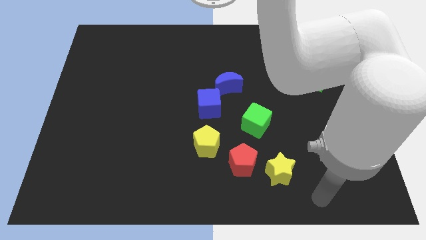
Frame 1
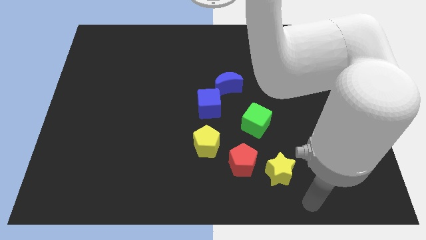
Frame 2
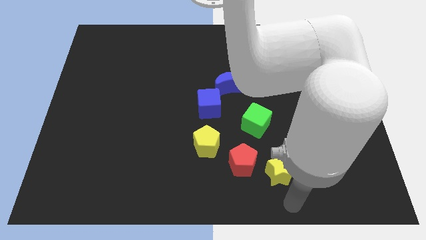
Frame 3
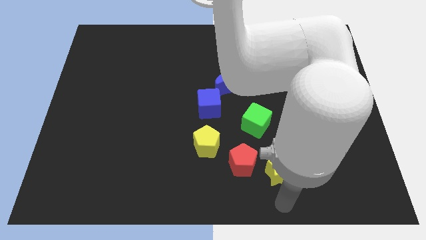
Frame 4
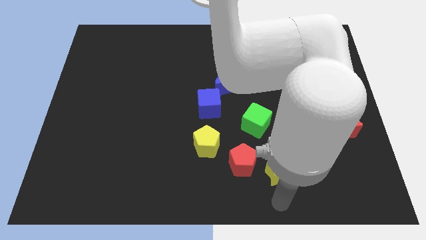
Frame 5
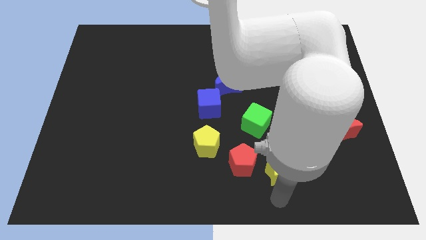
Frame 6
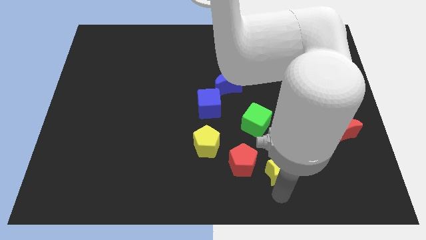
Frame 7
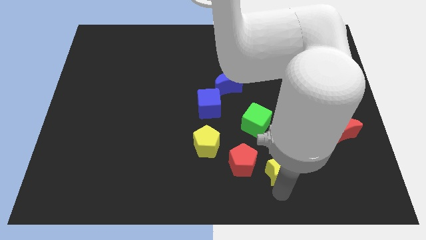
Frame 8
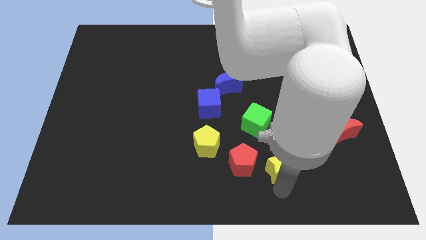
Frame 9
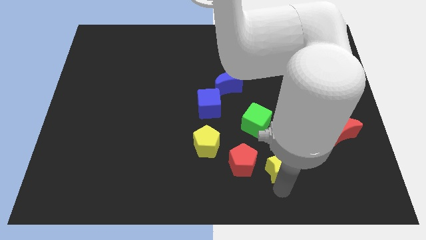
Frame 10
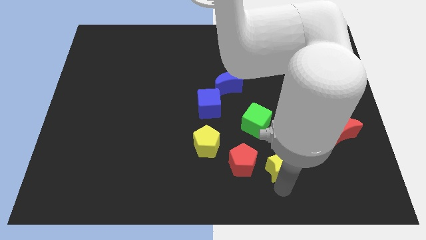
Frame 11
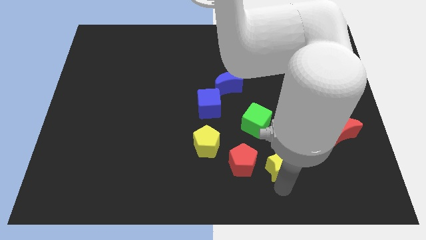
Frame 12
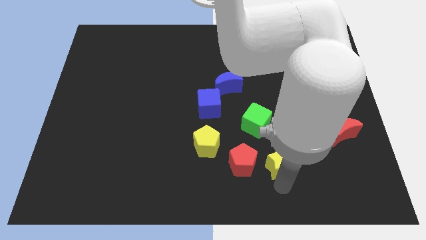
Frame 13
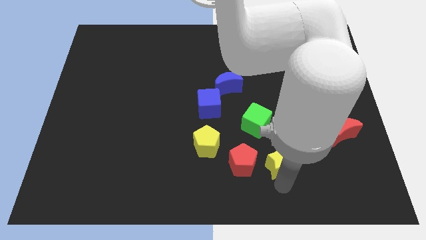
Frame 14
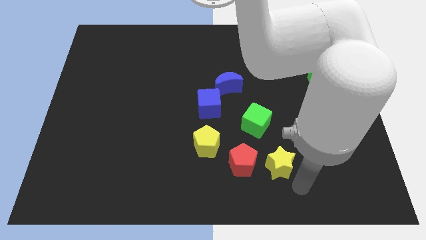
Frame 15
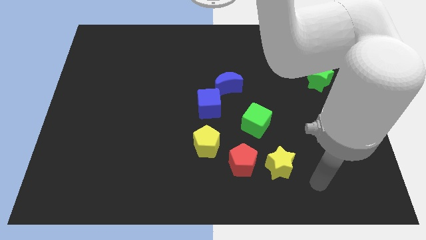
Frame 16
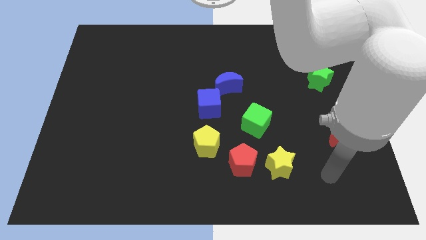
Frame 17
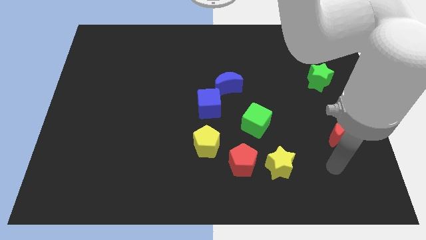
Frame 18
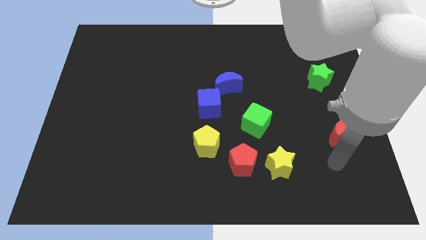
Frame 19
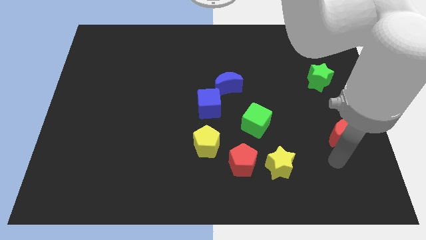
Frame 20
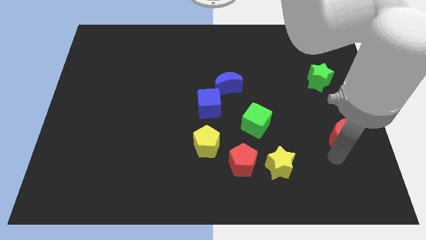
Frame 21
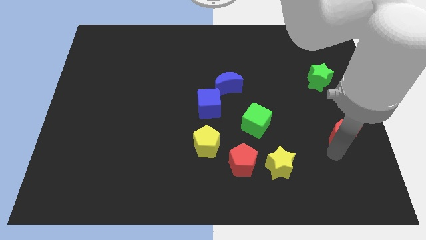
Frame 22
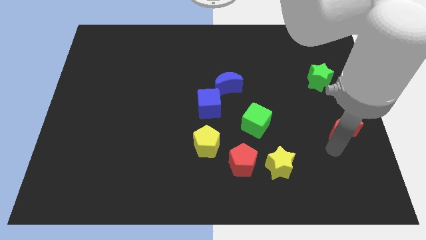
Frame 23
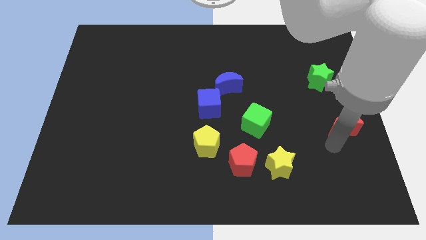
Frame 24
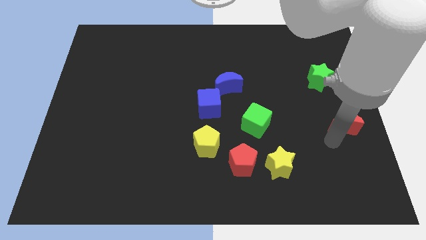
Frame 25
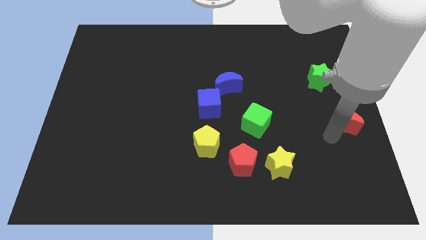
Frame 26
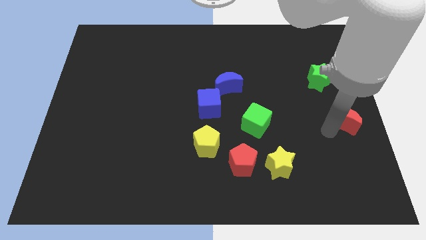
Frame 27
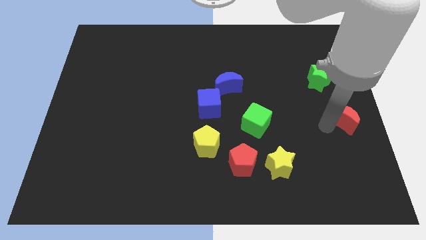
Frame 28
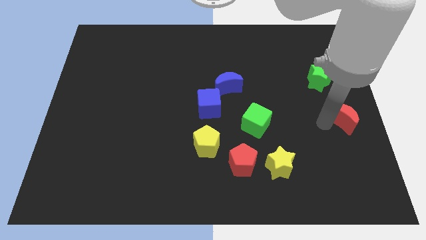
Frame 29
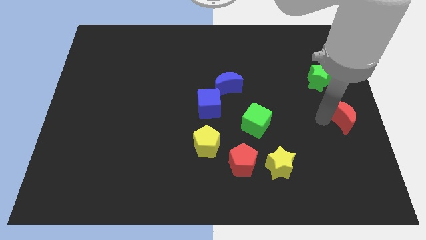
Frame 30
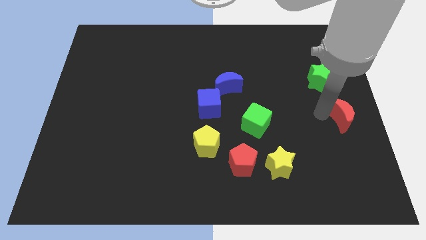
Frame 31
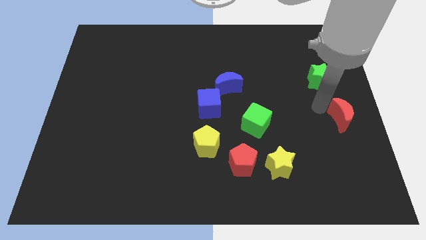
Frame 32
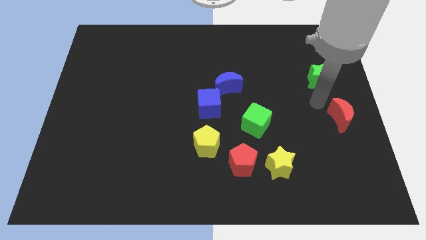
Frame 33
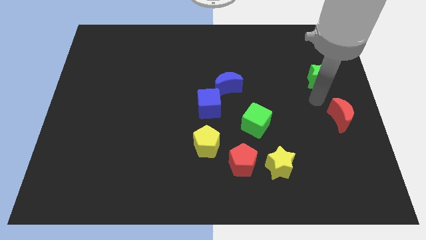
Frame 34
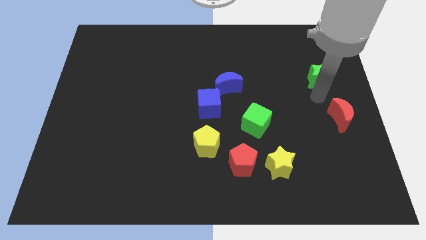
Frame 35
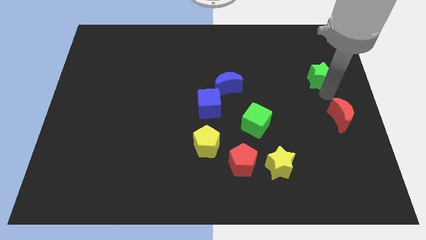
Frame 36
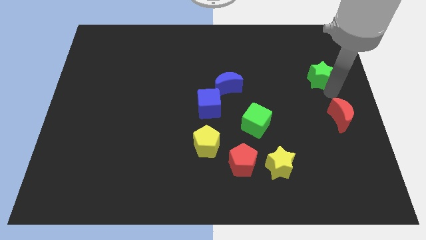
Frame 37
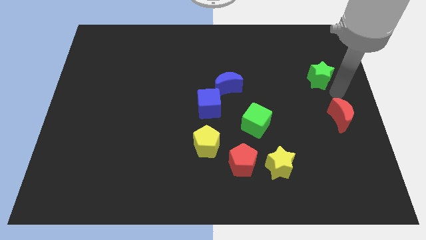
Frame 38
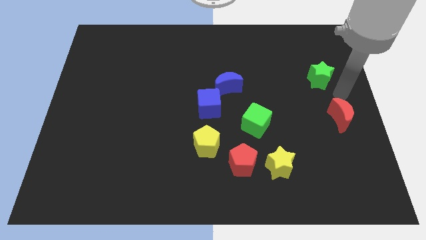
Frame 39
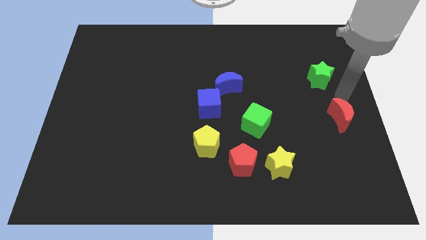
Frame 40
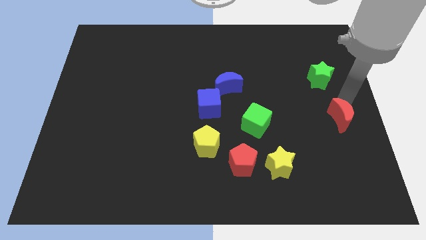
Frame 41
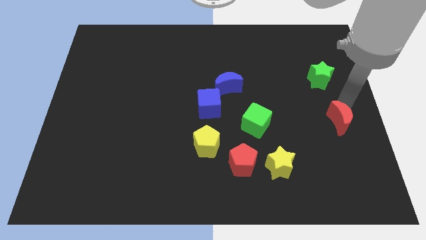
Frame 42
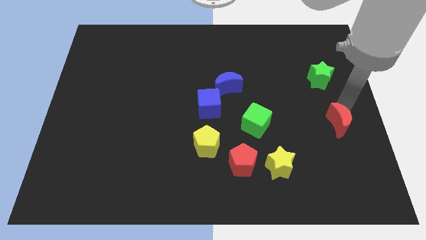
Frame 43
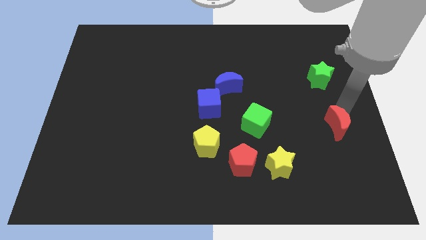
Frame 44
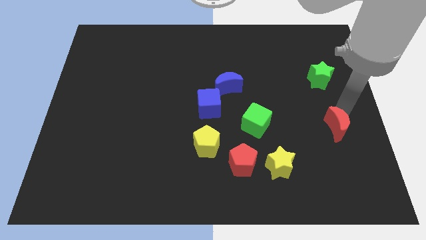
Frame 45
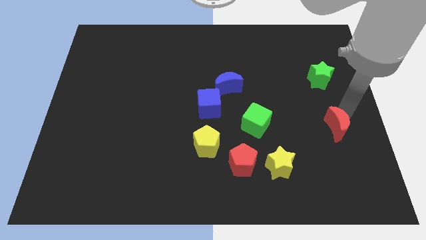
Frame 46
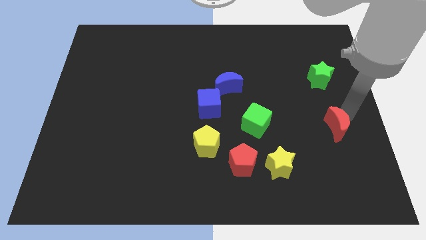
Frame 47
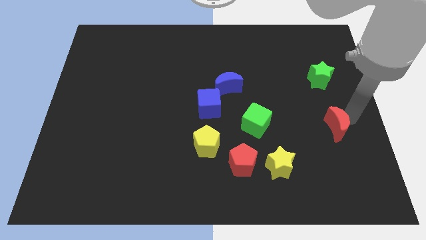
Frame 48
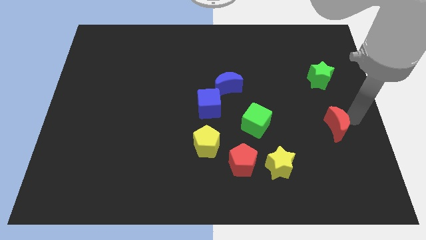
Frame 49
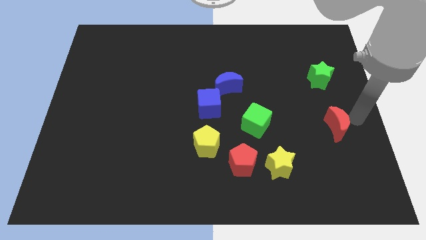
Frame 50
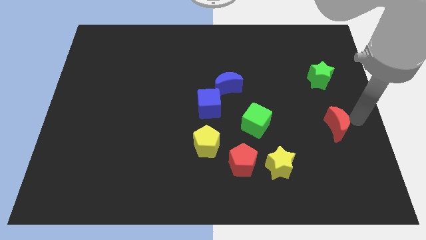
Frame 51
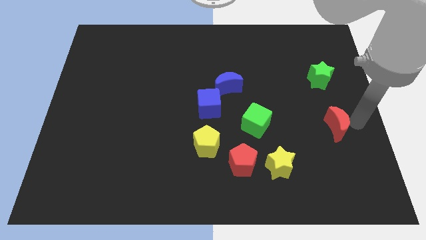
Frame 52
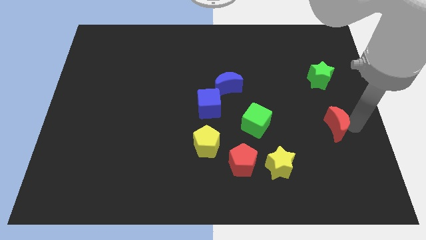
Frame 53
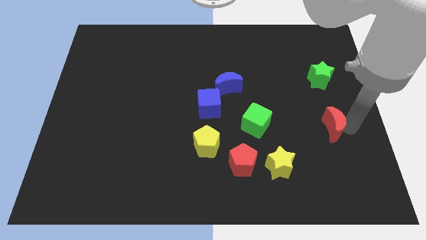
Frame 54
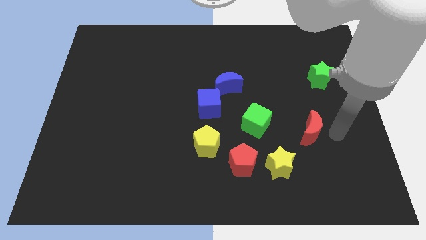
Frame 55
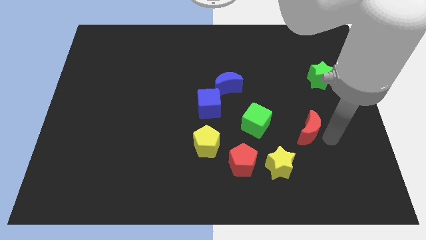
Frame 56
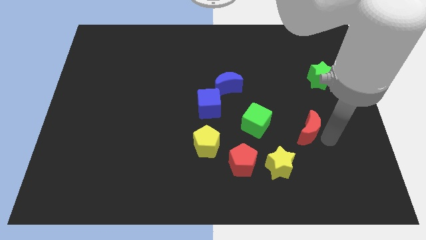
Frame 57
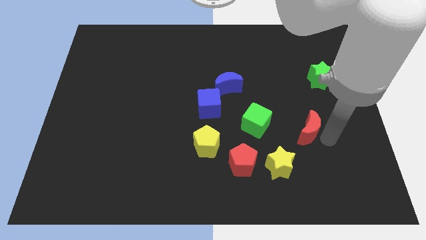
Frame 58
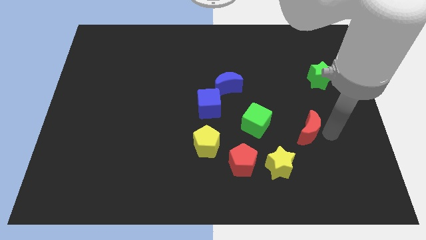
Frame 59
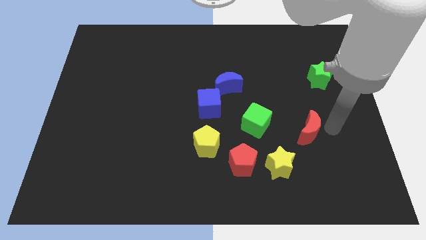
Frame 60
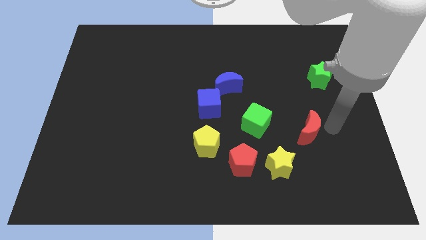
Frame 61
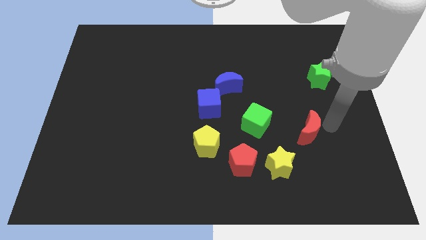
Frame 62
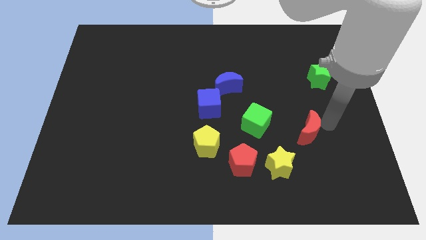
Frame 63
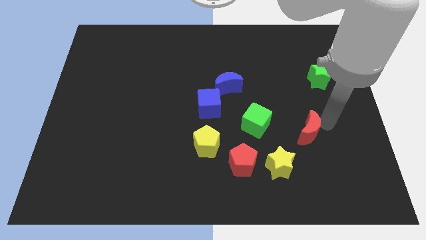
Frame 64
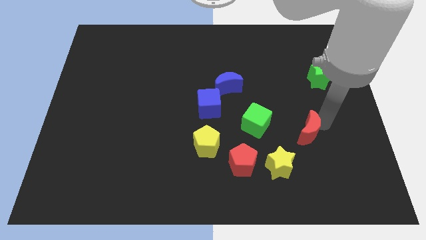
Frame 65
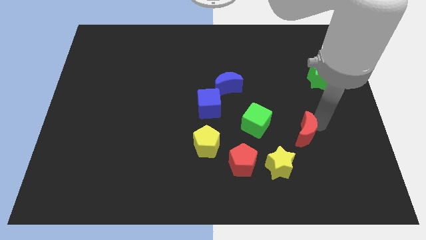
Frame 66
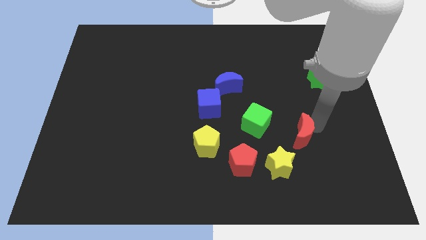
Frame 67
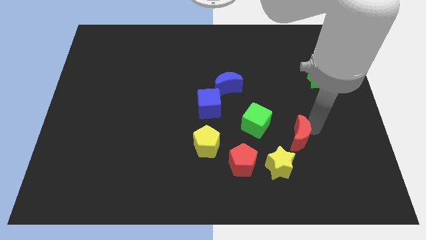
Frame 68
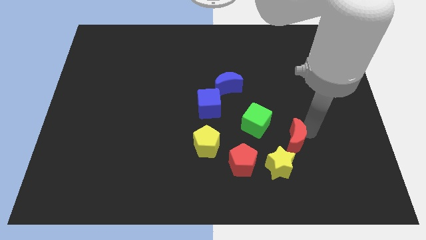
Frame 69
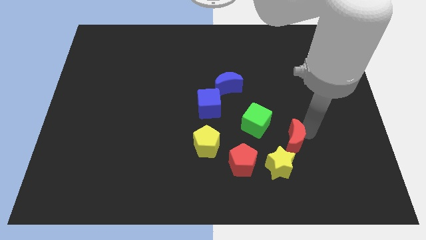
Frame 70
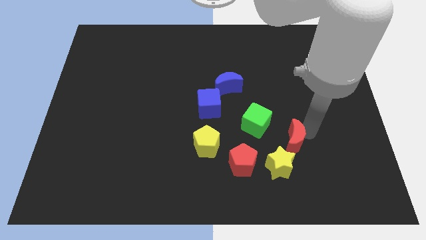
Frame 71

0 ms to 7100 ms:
place red moon to the right side of green cube

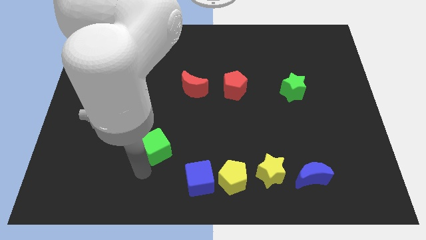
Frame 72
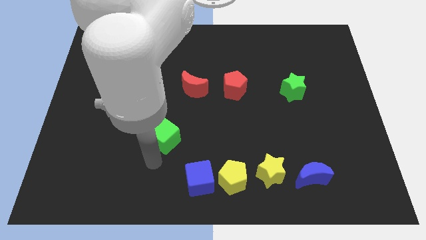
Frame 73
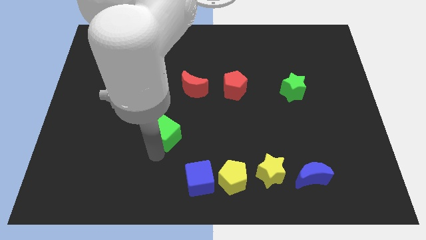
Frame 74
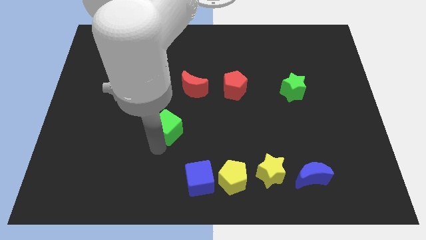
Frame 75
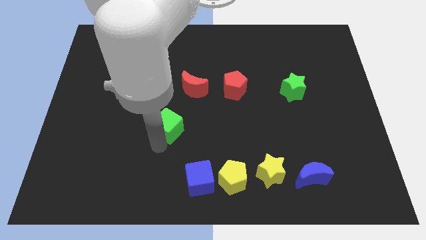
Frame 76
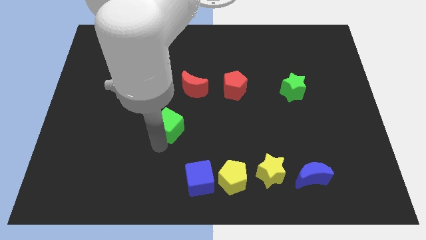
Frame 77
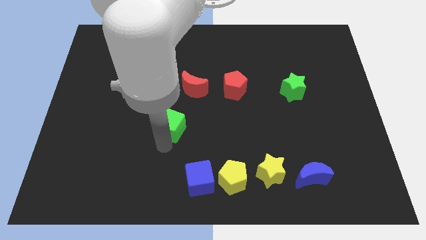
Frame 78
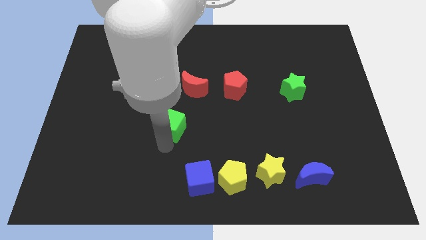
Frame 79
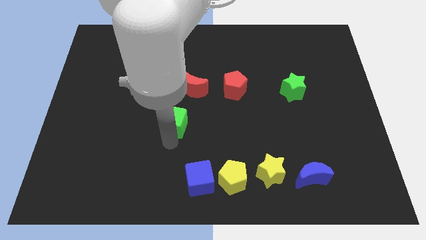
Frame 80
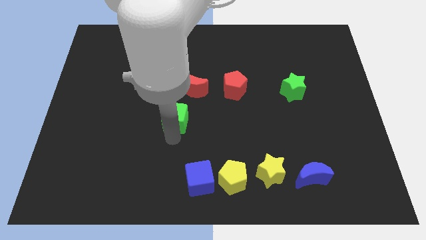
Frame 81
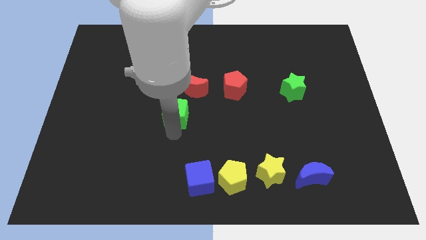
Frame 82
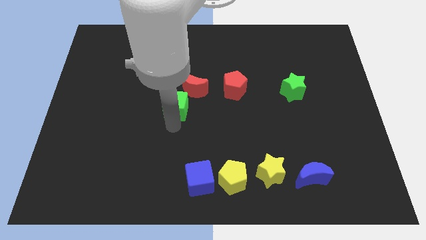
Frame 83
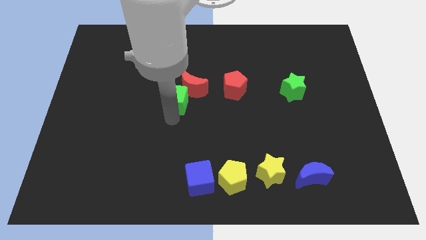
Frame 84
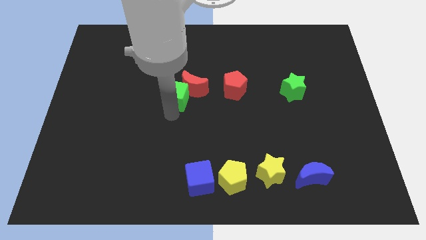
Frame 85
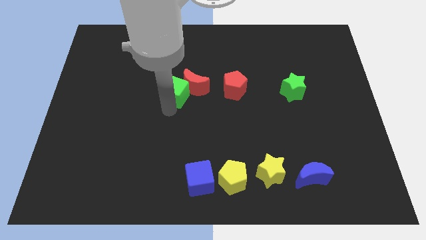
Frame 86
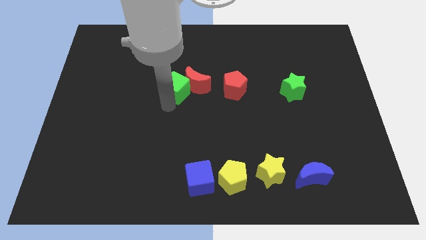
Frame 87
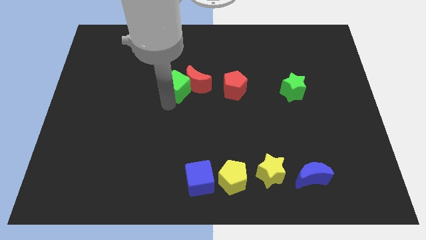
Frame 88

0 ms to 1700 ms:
push the green cube into the red moon

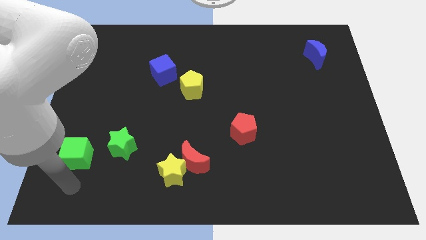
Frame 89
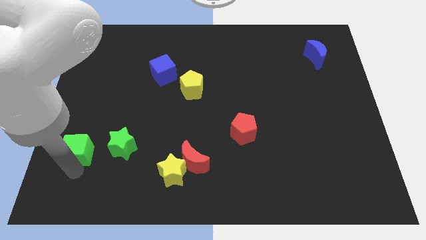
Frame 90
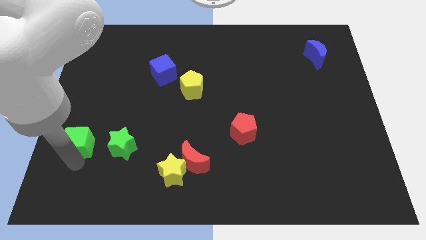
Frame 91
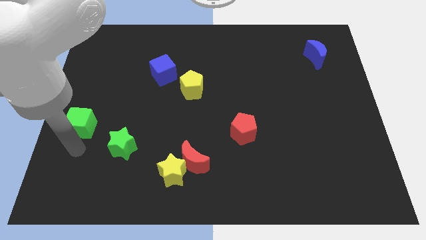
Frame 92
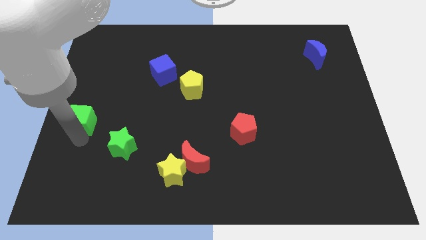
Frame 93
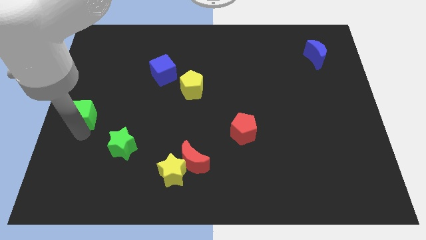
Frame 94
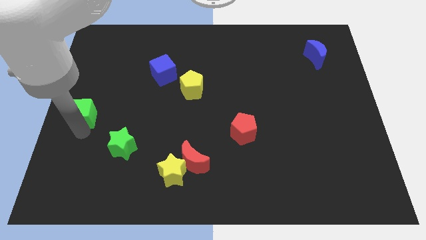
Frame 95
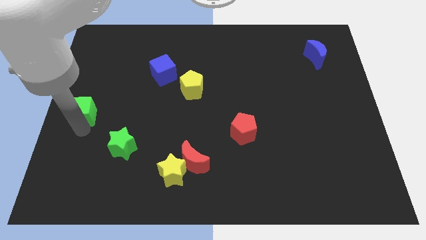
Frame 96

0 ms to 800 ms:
push the green cube diagonally to the top left of the green star
